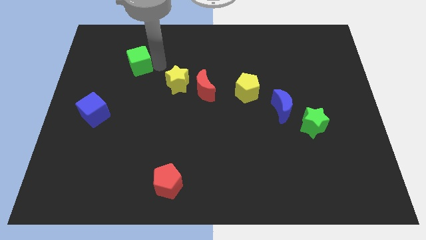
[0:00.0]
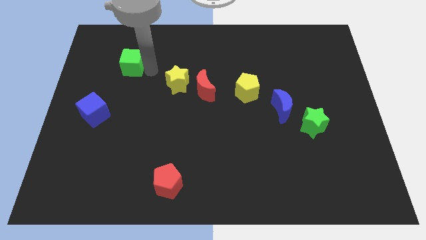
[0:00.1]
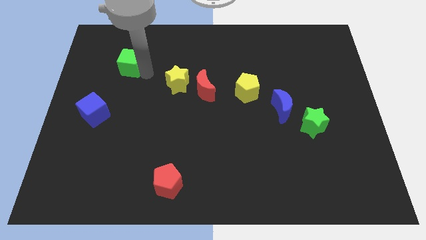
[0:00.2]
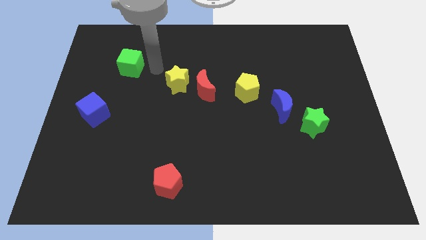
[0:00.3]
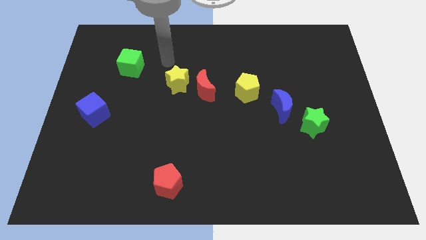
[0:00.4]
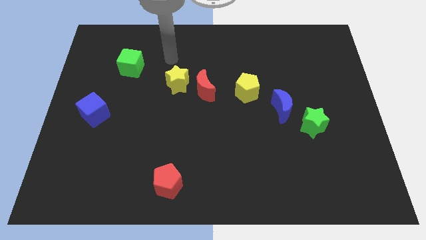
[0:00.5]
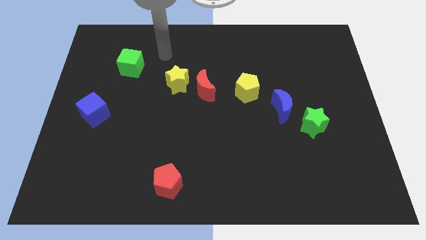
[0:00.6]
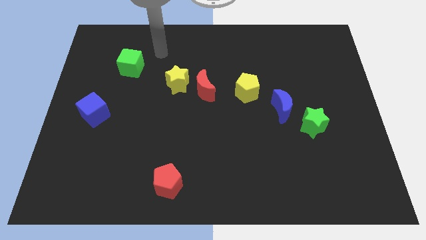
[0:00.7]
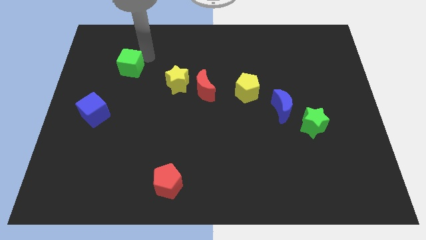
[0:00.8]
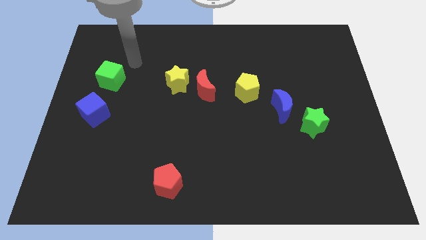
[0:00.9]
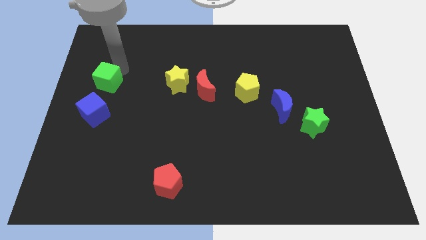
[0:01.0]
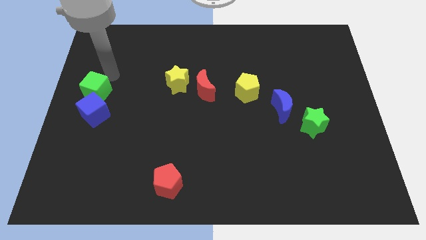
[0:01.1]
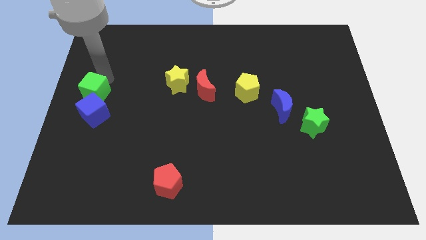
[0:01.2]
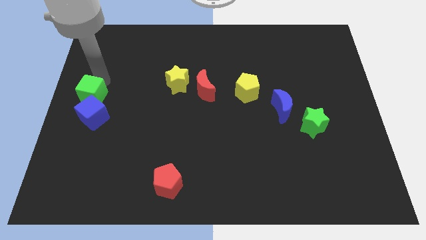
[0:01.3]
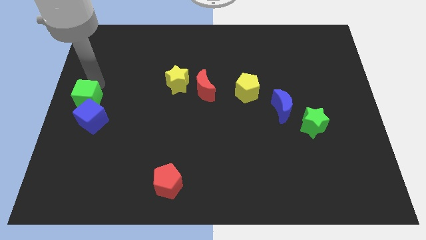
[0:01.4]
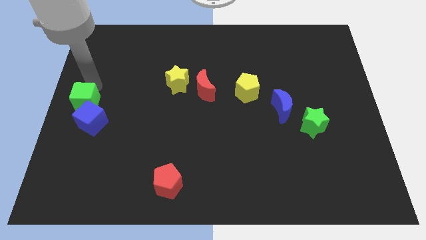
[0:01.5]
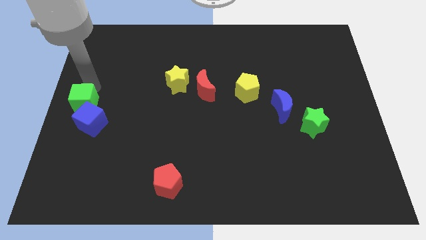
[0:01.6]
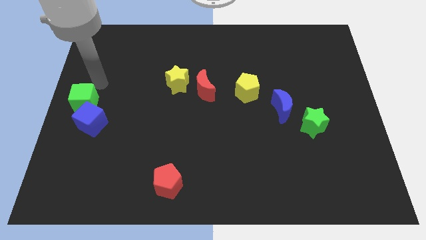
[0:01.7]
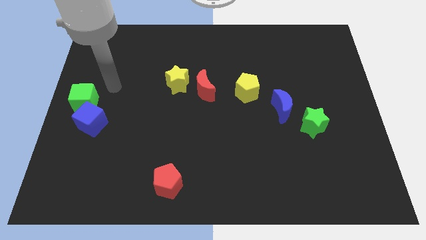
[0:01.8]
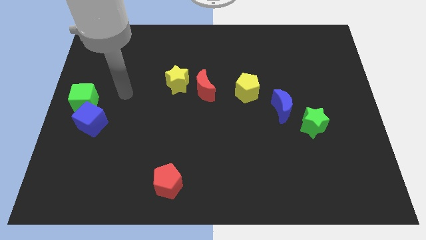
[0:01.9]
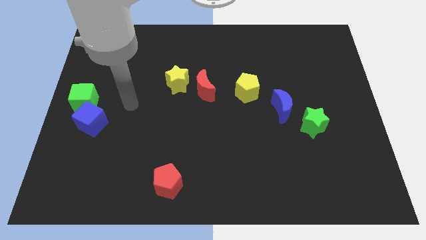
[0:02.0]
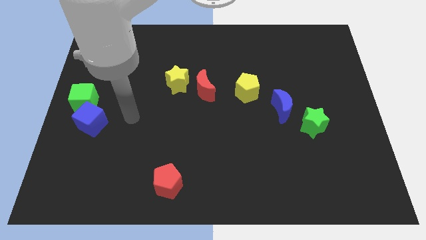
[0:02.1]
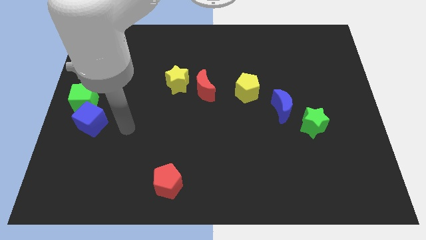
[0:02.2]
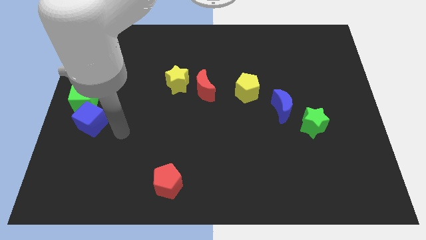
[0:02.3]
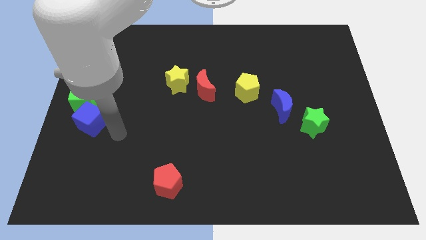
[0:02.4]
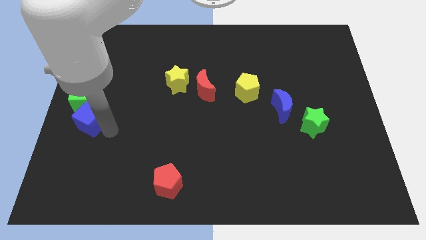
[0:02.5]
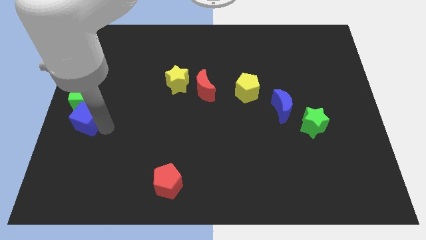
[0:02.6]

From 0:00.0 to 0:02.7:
move the blue cube with the green cube towards down

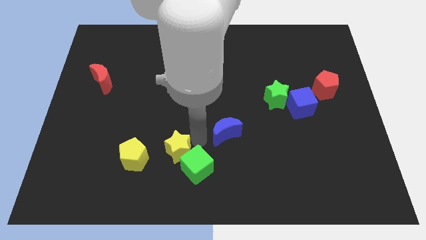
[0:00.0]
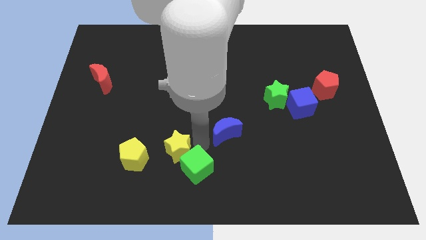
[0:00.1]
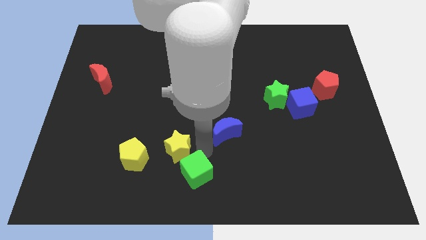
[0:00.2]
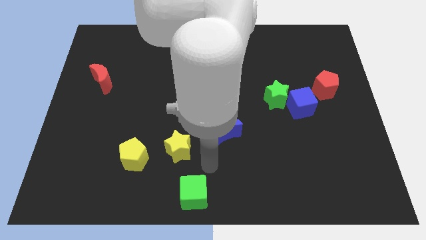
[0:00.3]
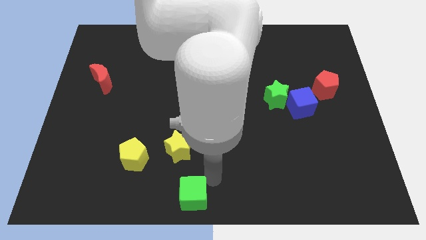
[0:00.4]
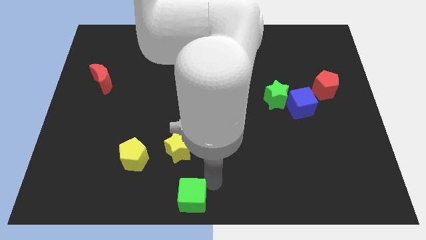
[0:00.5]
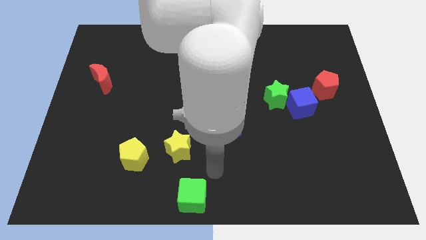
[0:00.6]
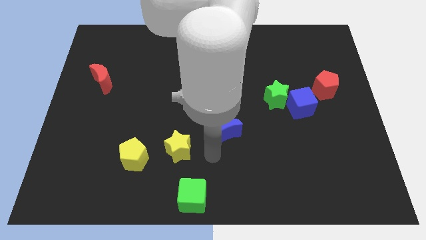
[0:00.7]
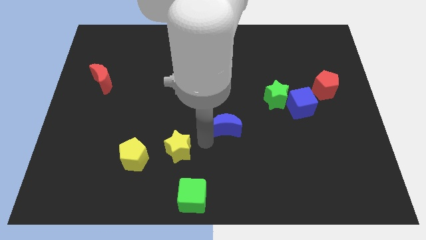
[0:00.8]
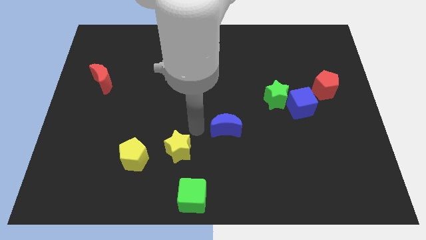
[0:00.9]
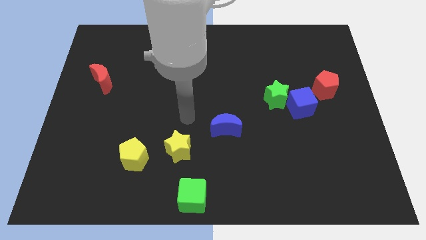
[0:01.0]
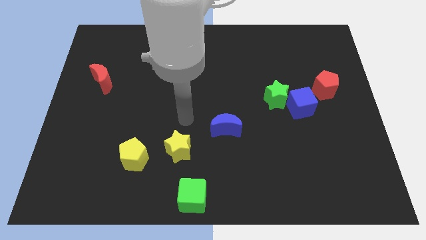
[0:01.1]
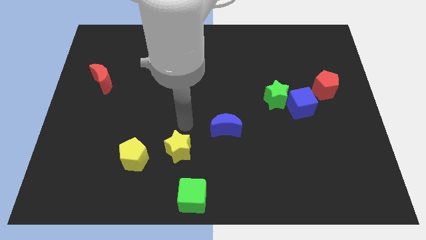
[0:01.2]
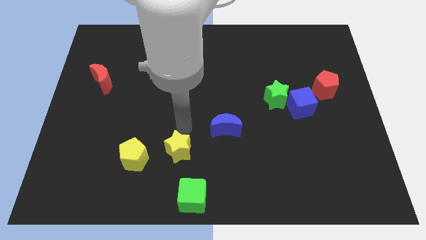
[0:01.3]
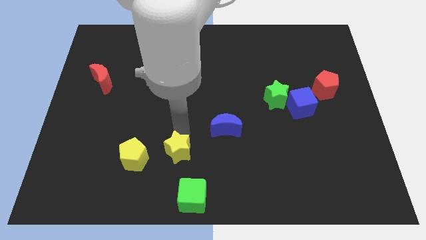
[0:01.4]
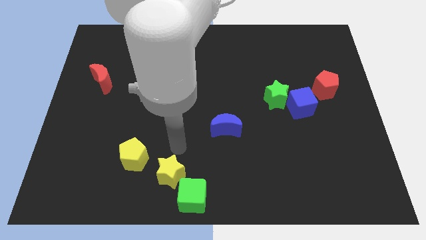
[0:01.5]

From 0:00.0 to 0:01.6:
place the green cube at the bottom center of the board

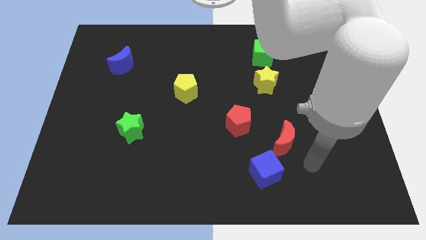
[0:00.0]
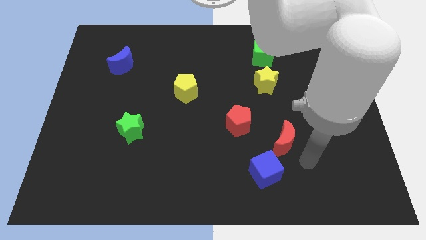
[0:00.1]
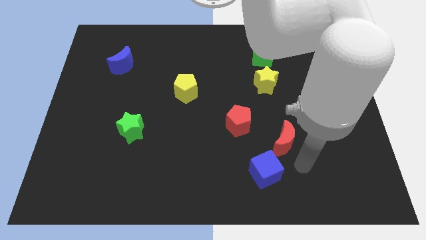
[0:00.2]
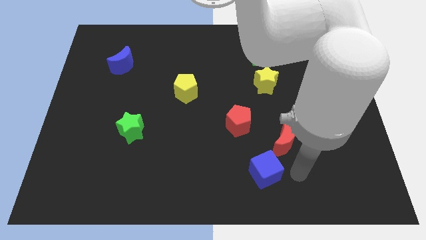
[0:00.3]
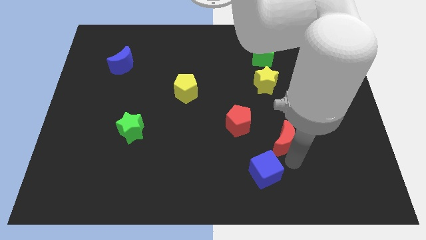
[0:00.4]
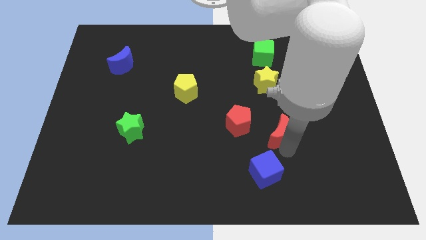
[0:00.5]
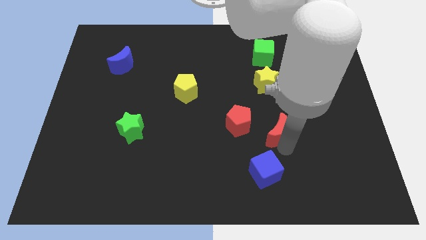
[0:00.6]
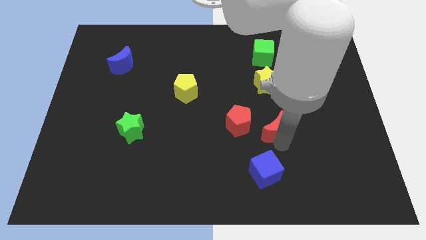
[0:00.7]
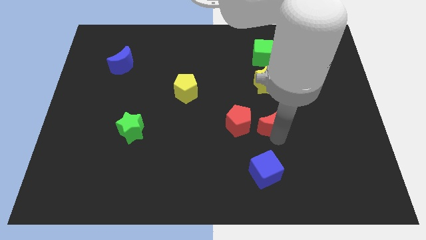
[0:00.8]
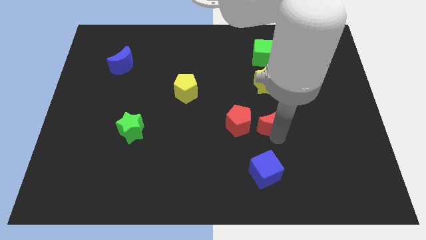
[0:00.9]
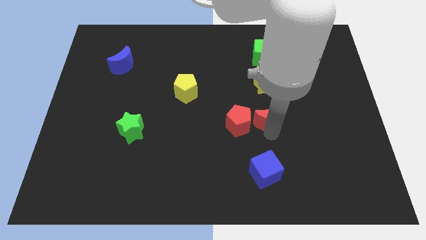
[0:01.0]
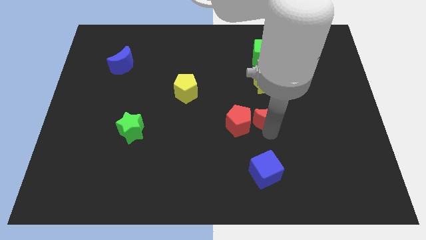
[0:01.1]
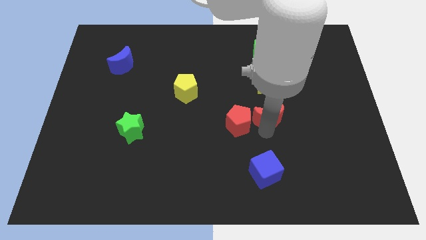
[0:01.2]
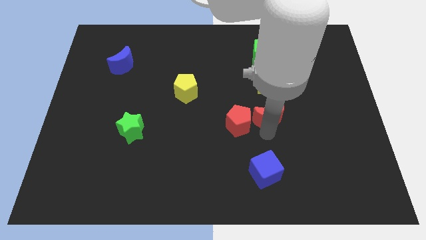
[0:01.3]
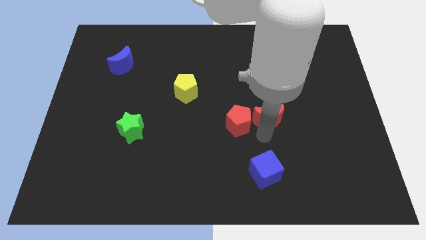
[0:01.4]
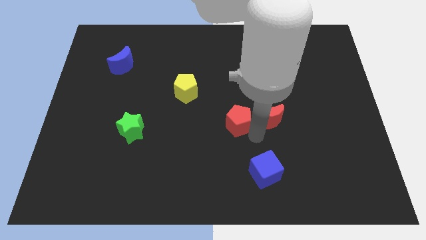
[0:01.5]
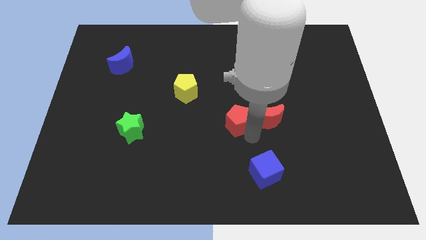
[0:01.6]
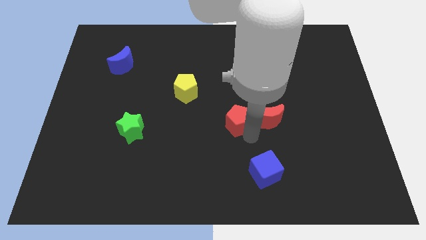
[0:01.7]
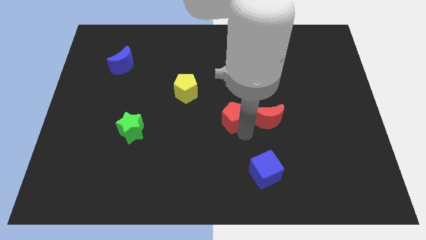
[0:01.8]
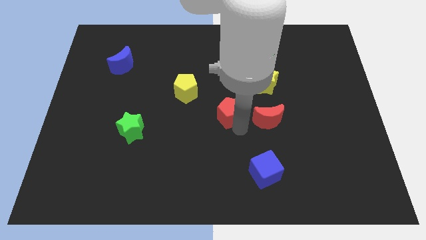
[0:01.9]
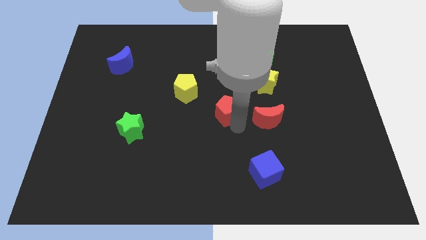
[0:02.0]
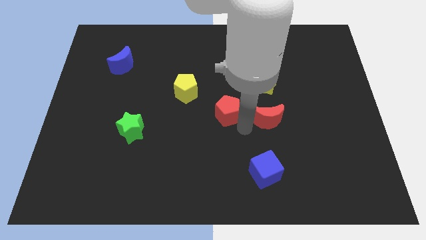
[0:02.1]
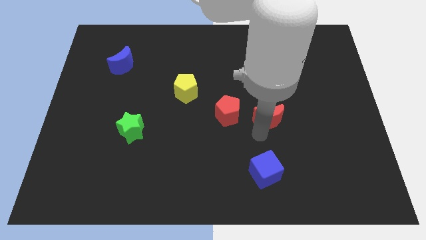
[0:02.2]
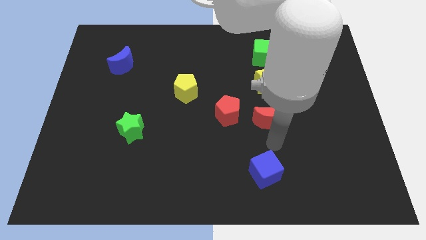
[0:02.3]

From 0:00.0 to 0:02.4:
put the red crescent below the yellow star

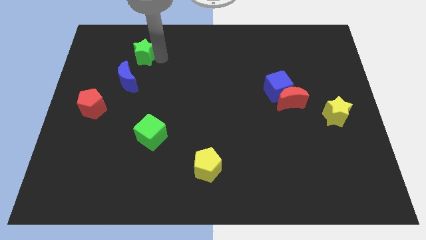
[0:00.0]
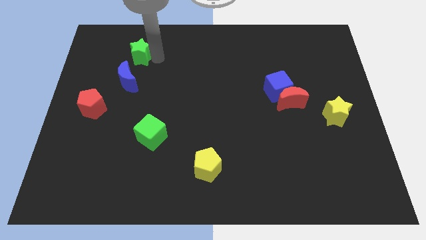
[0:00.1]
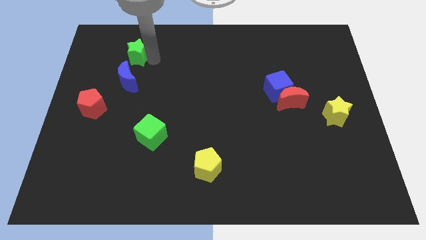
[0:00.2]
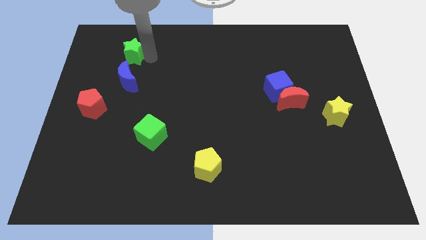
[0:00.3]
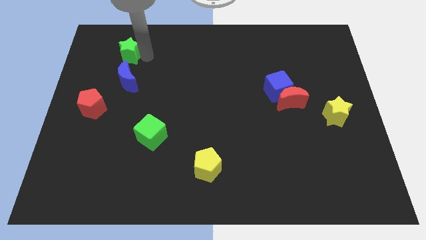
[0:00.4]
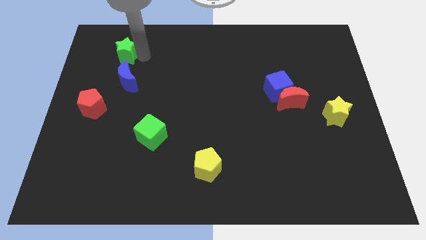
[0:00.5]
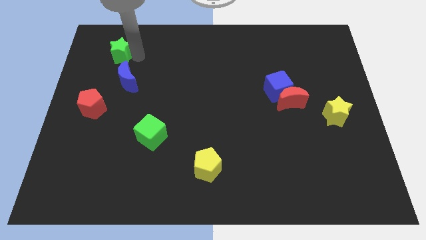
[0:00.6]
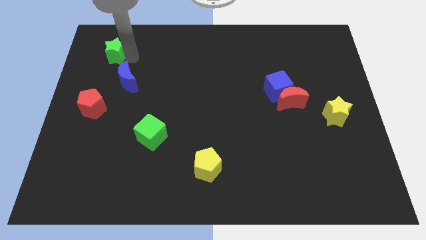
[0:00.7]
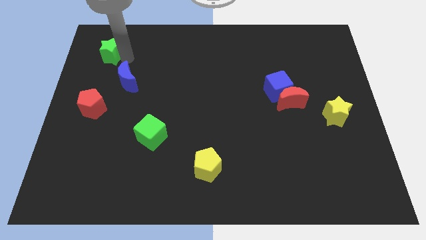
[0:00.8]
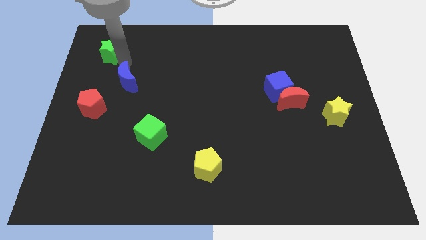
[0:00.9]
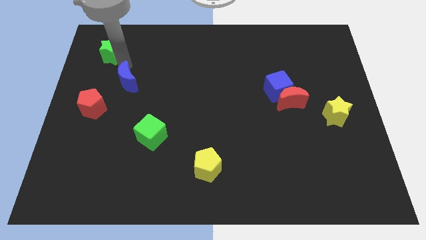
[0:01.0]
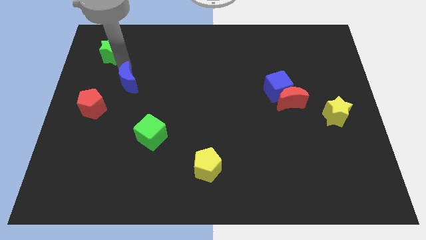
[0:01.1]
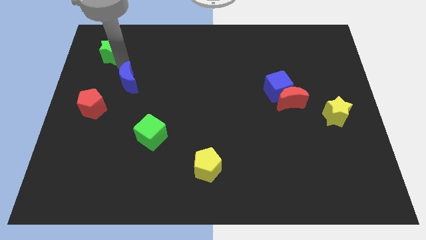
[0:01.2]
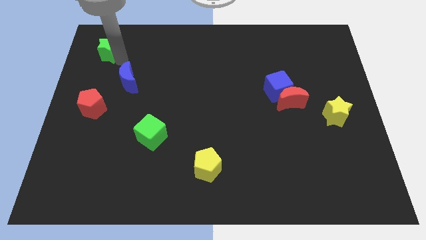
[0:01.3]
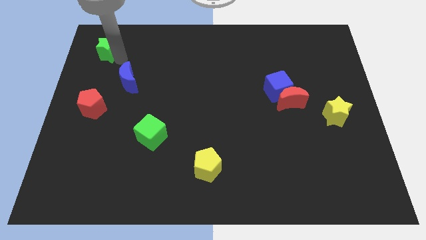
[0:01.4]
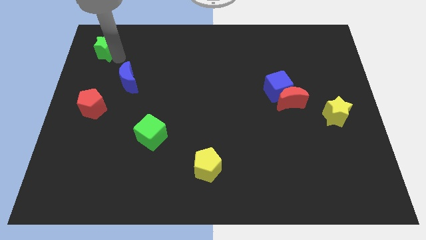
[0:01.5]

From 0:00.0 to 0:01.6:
point the arm in between green star and blue moon

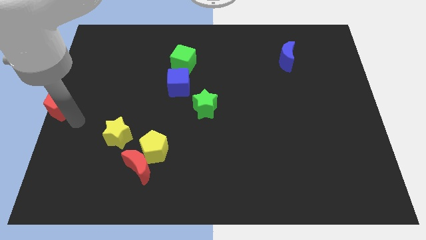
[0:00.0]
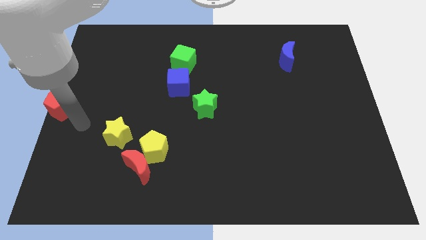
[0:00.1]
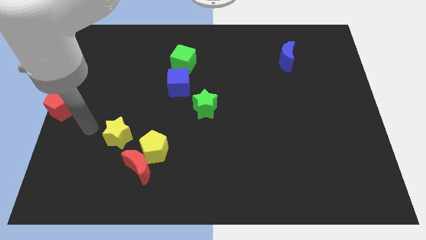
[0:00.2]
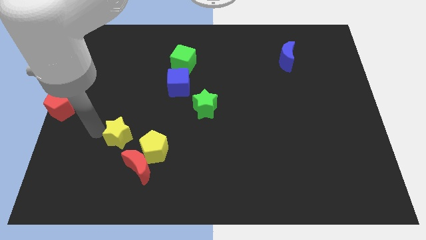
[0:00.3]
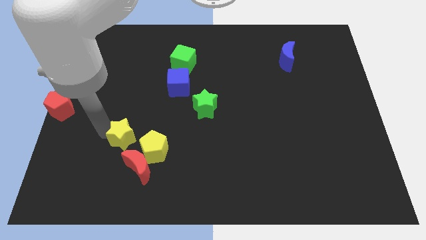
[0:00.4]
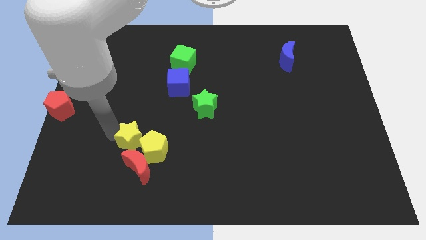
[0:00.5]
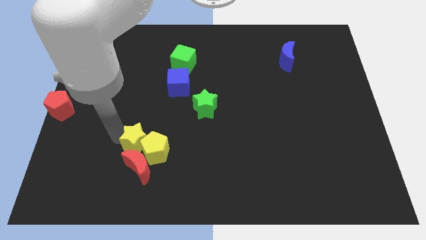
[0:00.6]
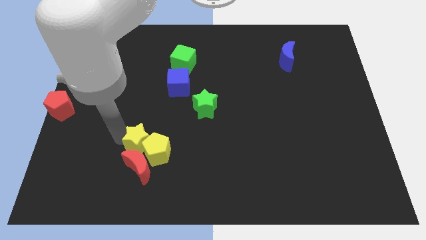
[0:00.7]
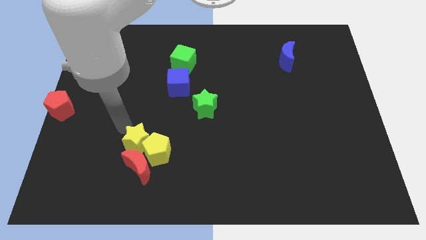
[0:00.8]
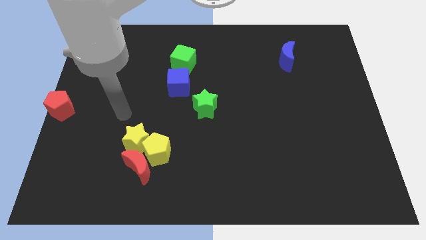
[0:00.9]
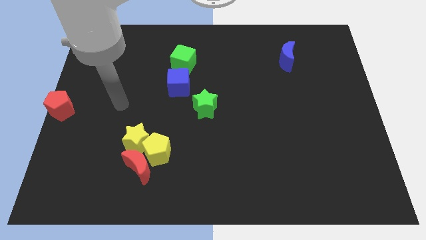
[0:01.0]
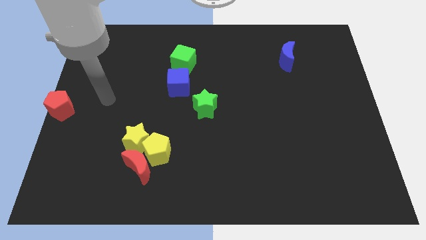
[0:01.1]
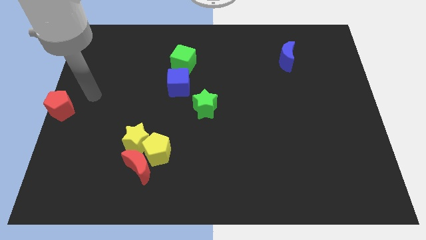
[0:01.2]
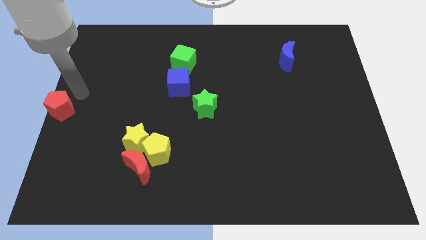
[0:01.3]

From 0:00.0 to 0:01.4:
push the yellow star into the yellow pentagon
